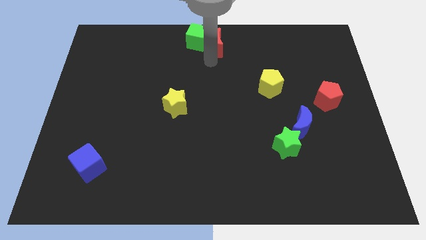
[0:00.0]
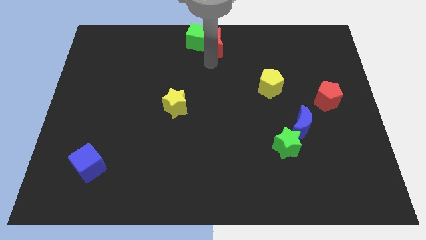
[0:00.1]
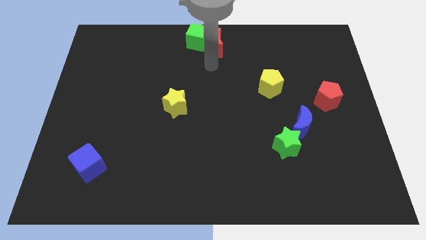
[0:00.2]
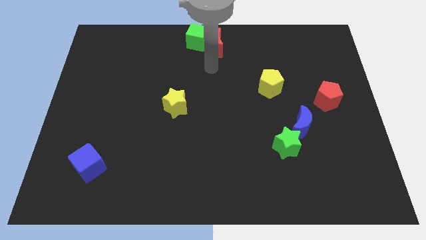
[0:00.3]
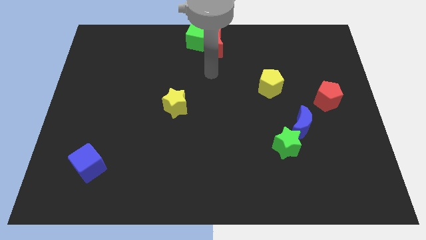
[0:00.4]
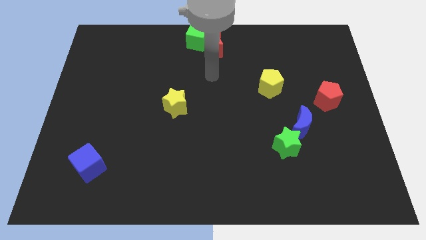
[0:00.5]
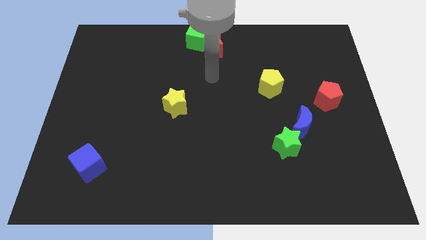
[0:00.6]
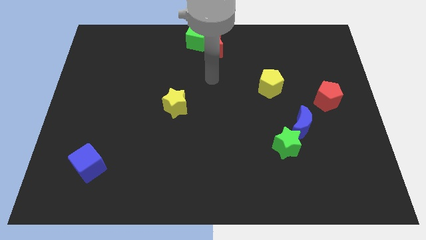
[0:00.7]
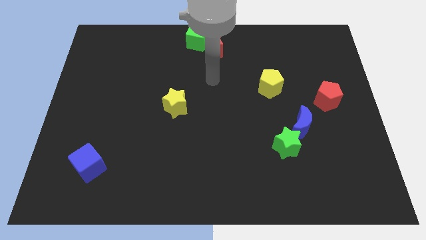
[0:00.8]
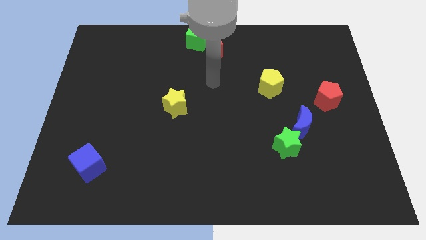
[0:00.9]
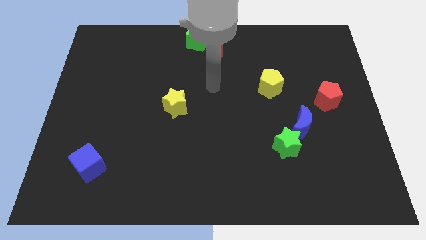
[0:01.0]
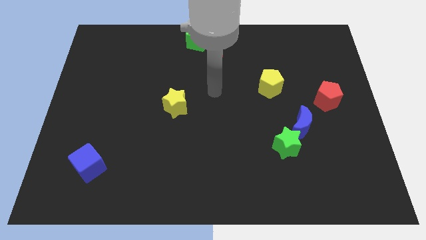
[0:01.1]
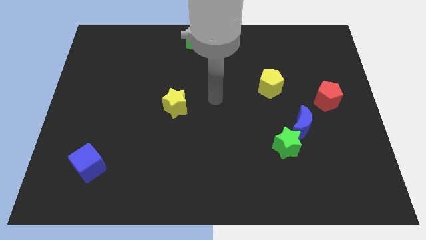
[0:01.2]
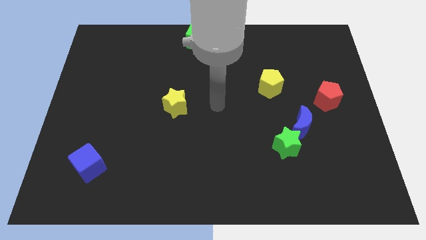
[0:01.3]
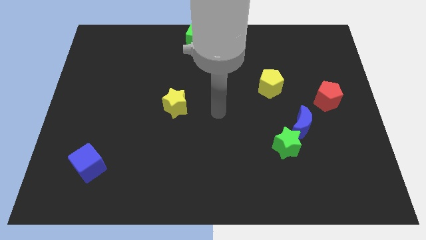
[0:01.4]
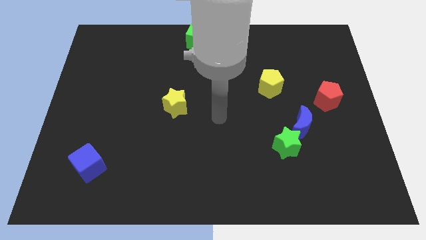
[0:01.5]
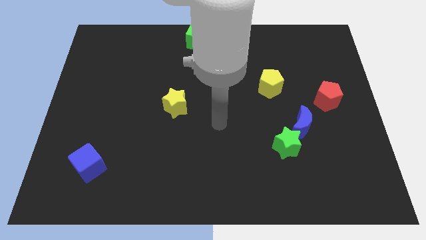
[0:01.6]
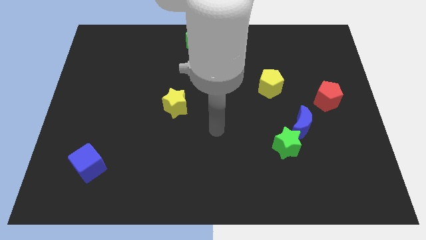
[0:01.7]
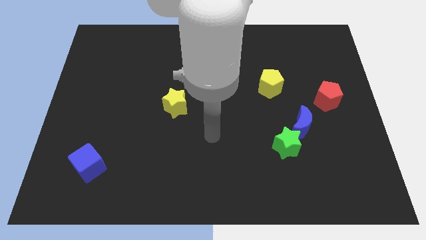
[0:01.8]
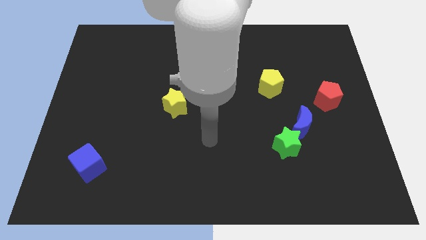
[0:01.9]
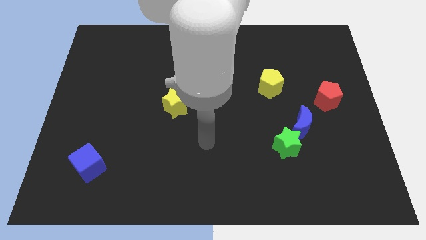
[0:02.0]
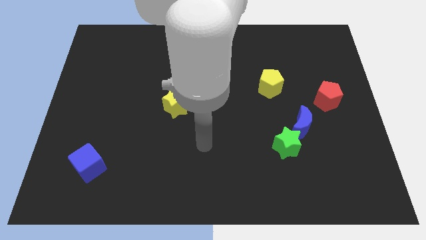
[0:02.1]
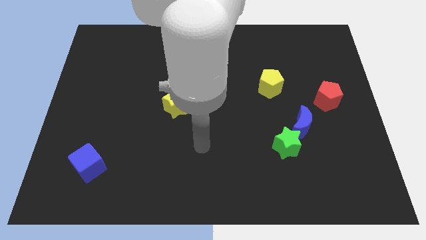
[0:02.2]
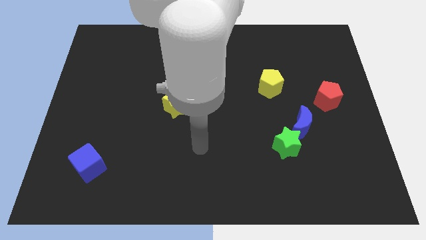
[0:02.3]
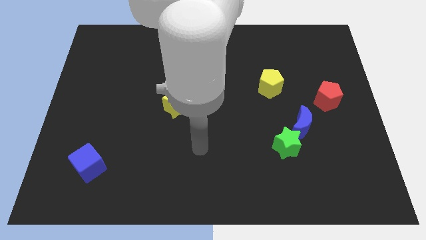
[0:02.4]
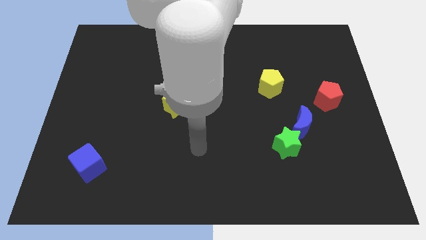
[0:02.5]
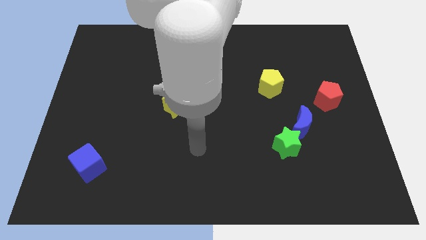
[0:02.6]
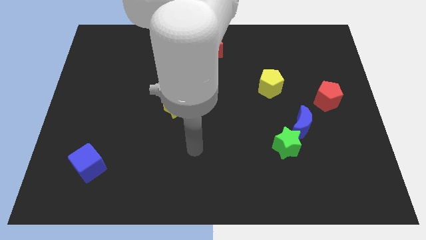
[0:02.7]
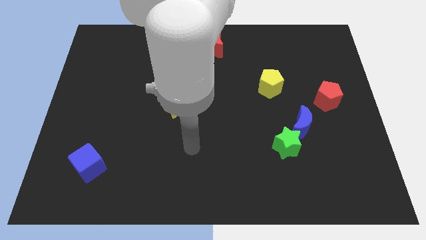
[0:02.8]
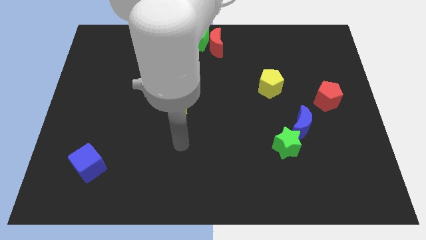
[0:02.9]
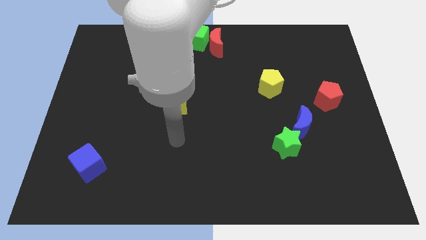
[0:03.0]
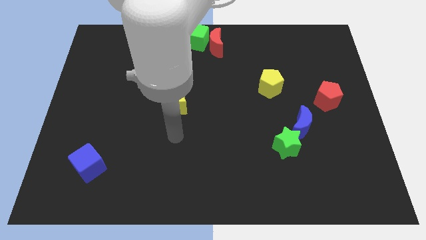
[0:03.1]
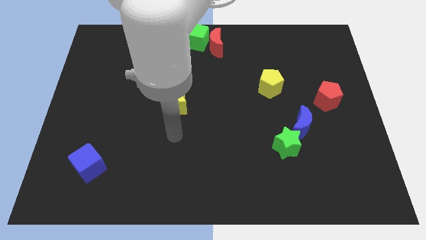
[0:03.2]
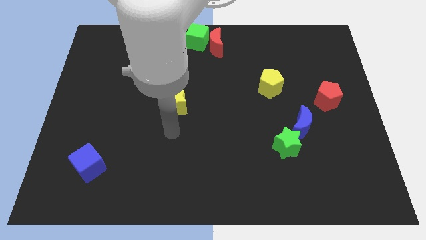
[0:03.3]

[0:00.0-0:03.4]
point your arm at the bottom of yellow star

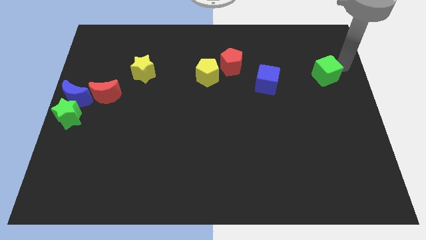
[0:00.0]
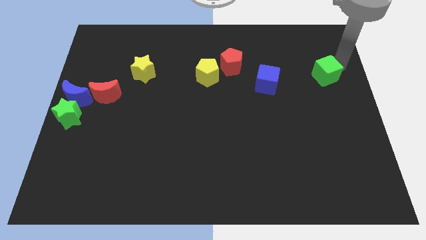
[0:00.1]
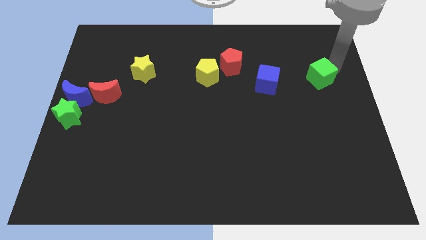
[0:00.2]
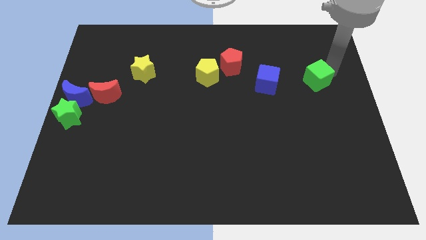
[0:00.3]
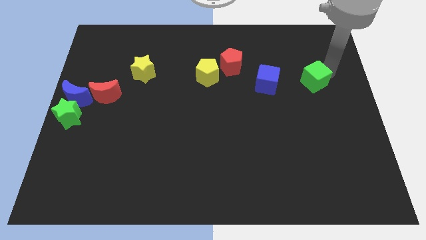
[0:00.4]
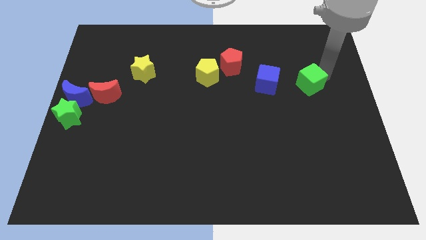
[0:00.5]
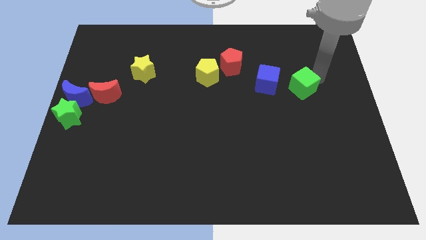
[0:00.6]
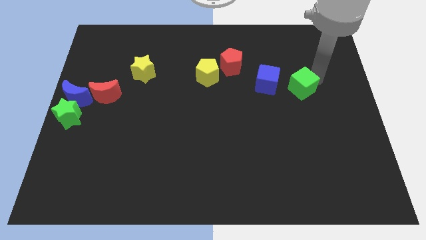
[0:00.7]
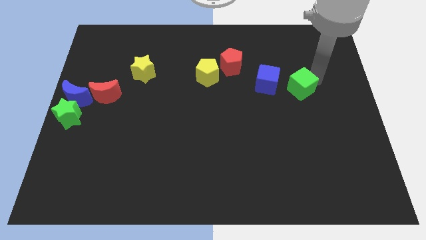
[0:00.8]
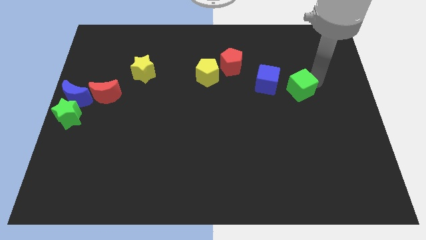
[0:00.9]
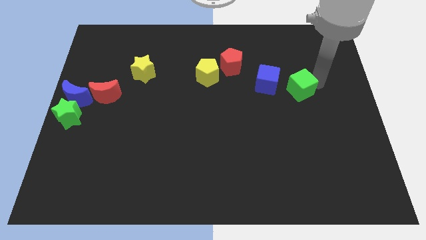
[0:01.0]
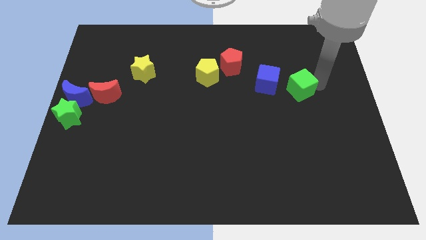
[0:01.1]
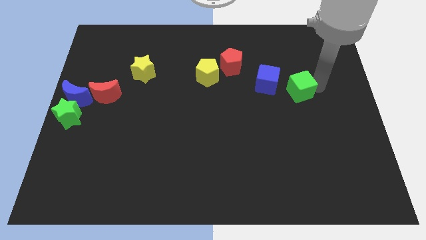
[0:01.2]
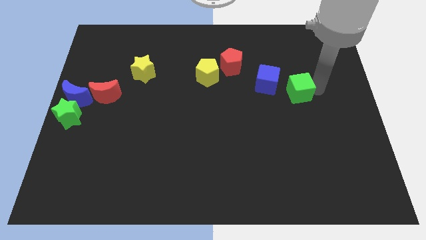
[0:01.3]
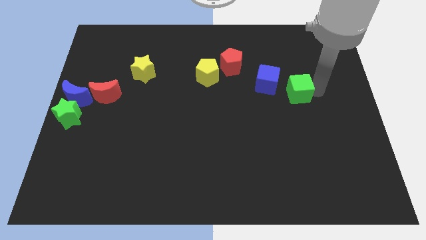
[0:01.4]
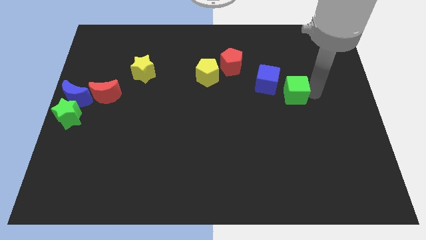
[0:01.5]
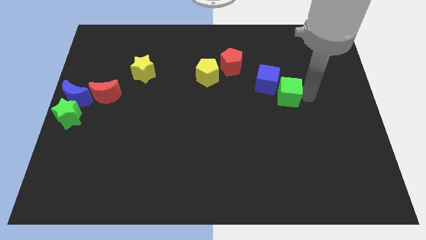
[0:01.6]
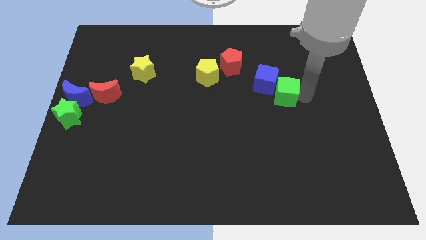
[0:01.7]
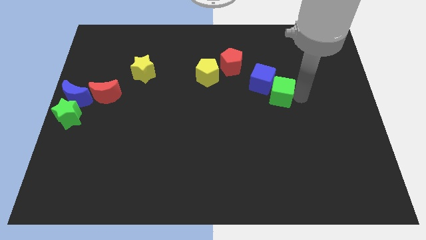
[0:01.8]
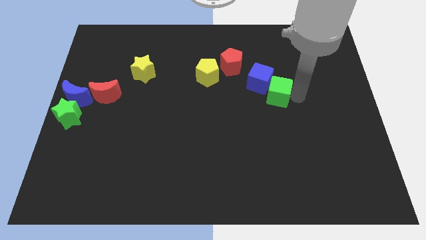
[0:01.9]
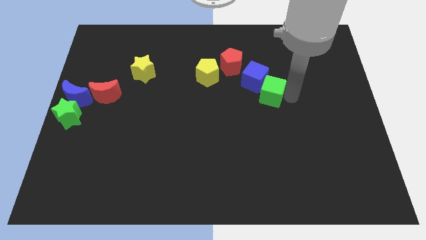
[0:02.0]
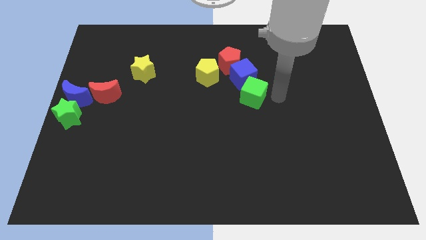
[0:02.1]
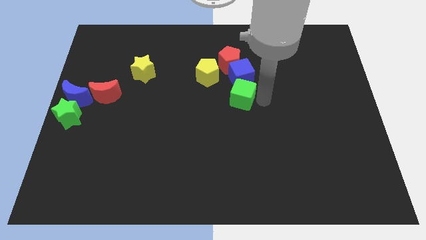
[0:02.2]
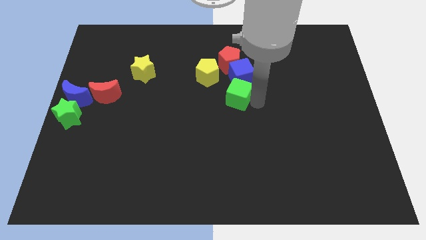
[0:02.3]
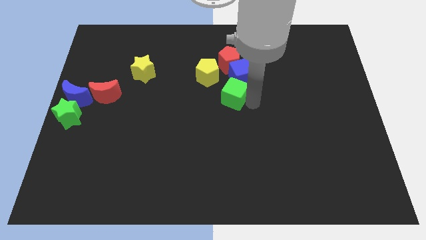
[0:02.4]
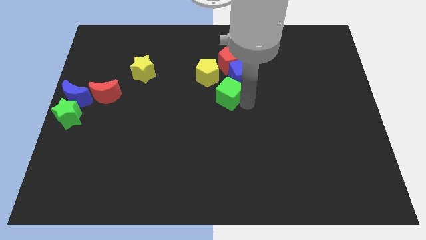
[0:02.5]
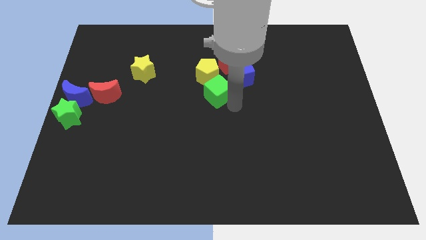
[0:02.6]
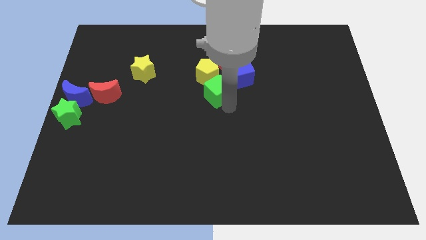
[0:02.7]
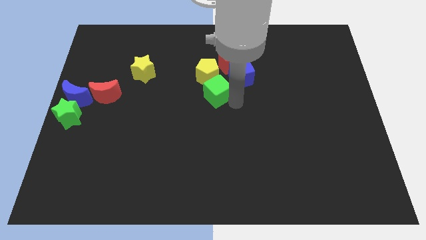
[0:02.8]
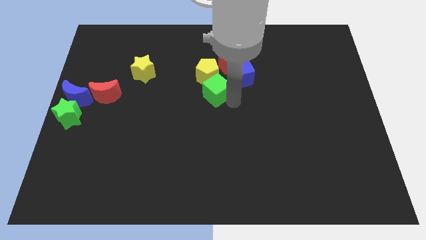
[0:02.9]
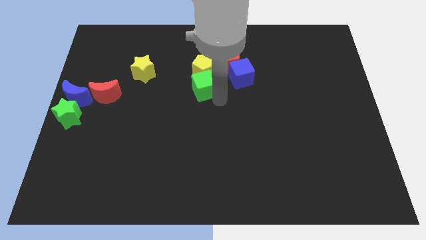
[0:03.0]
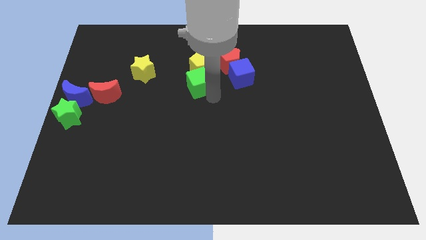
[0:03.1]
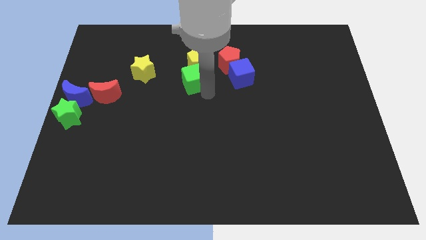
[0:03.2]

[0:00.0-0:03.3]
push the green cube into the yellow pentagon

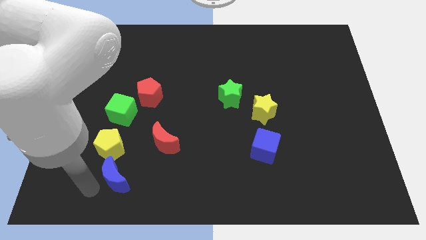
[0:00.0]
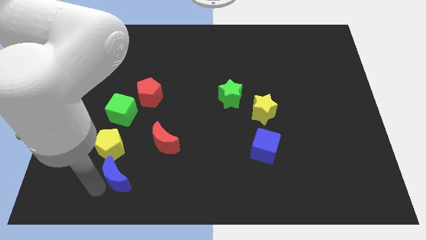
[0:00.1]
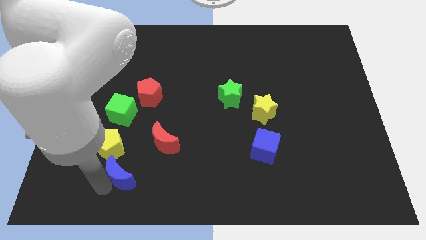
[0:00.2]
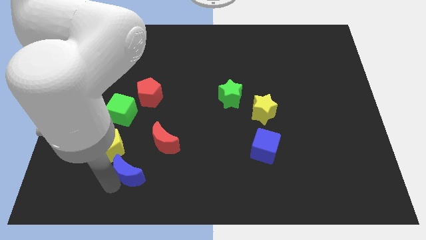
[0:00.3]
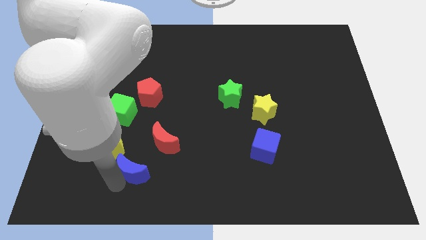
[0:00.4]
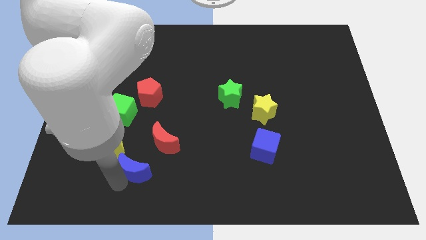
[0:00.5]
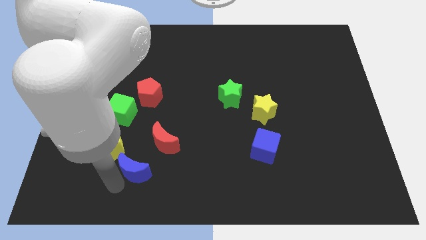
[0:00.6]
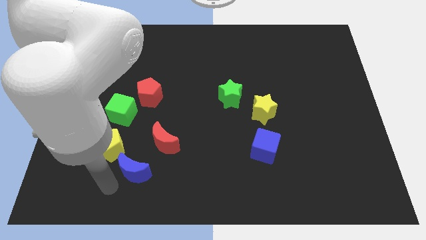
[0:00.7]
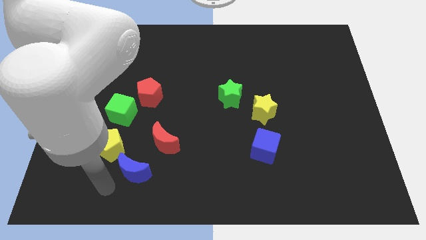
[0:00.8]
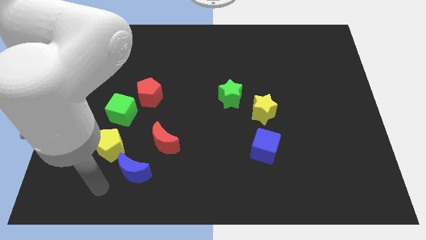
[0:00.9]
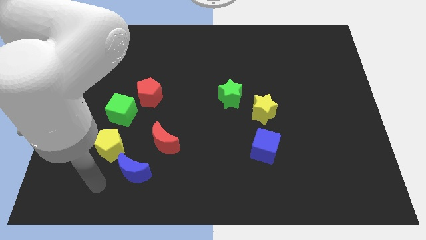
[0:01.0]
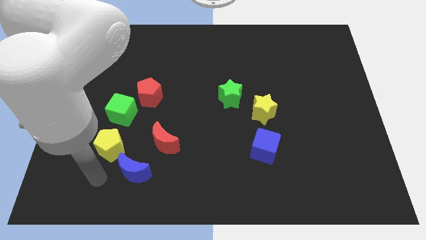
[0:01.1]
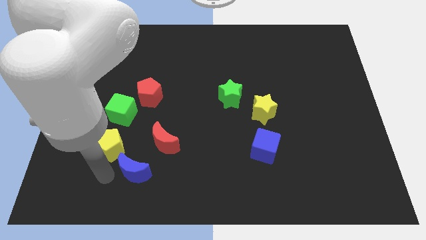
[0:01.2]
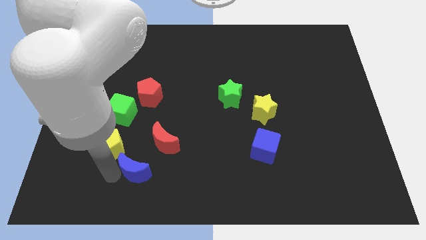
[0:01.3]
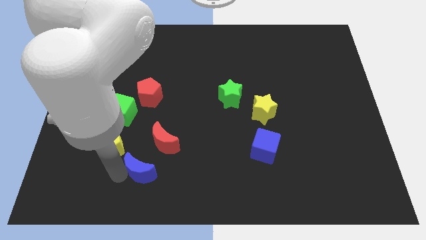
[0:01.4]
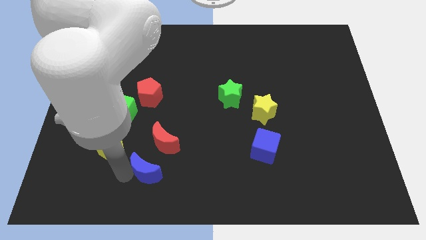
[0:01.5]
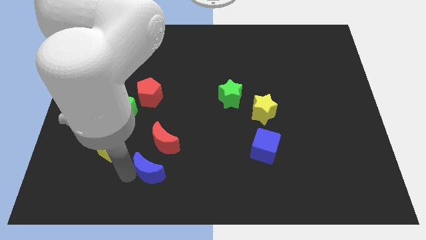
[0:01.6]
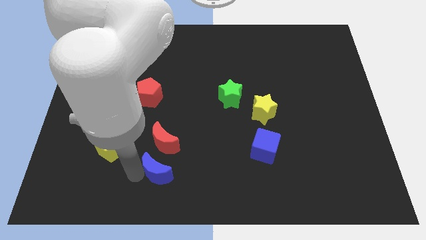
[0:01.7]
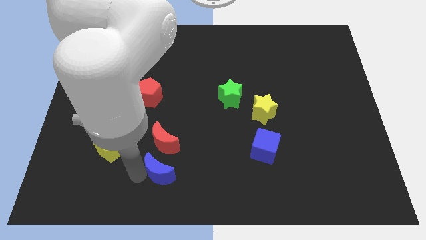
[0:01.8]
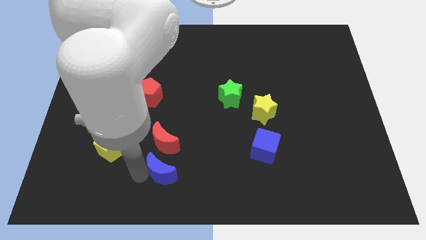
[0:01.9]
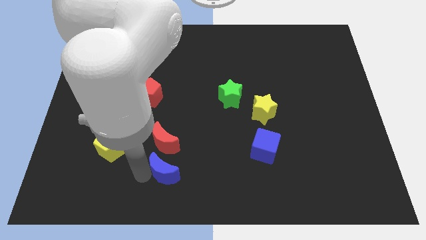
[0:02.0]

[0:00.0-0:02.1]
move the blue crescent to the bottom of the red crescent

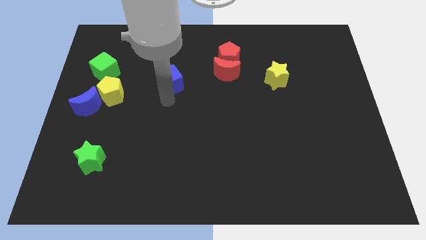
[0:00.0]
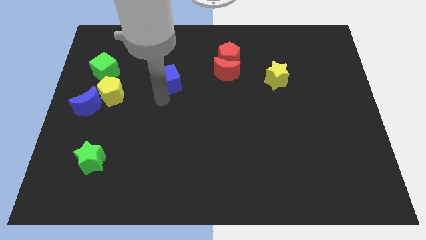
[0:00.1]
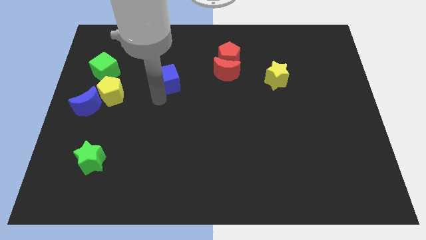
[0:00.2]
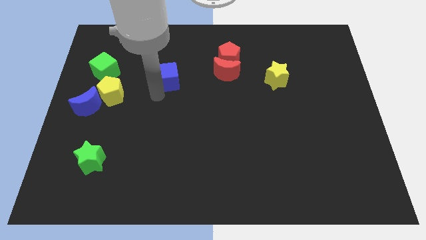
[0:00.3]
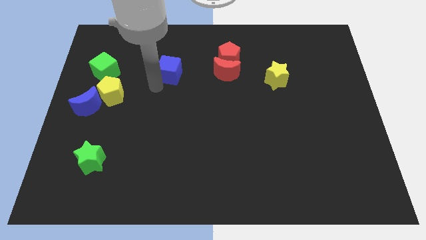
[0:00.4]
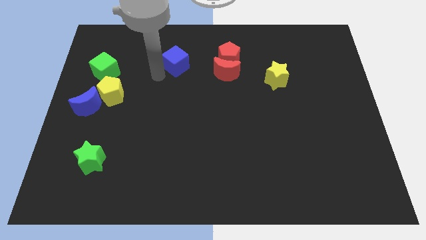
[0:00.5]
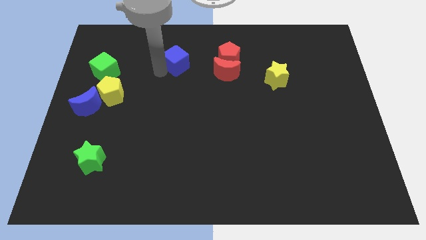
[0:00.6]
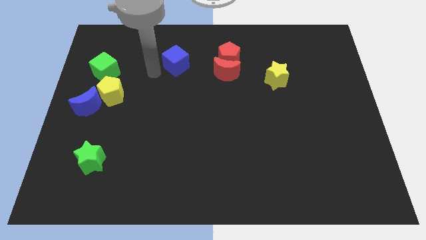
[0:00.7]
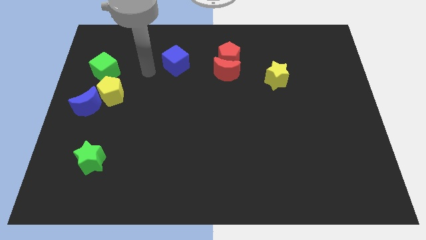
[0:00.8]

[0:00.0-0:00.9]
place the blue cube parallel to red blocks
